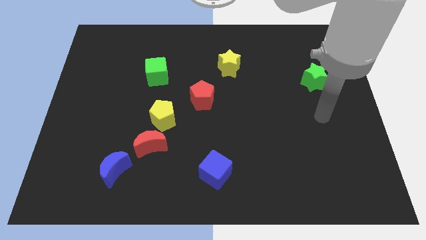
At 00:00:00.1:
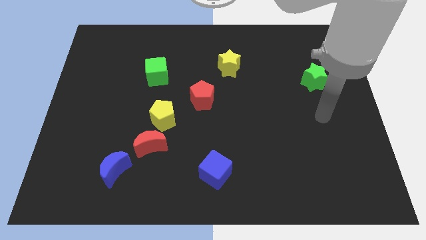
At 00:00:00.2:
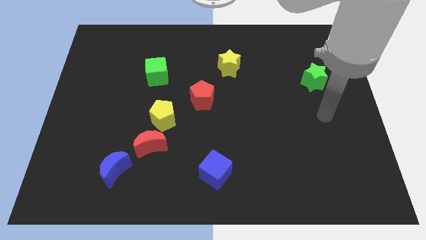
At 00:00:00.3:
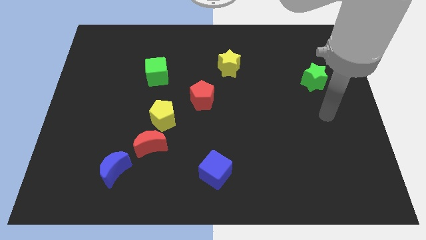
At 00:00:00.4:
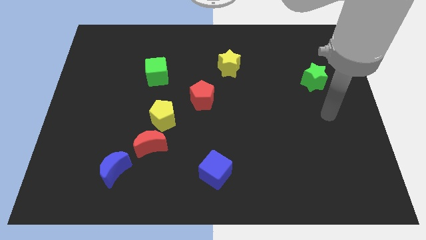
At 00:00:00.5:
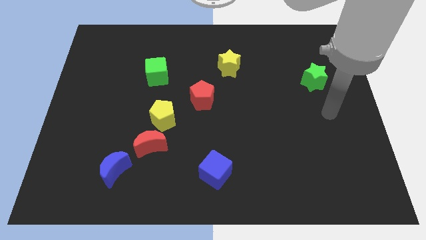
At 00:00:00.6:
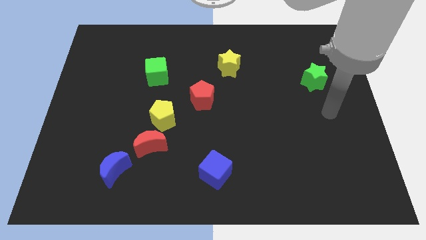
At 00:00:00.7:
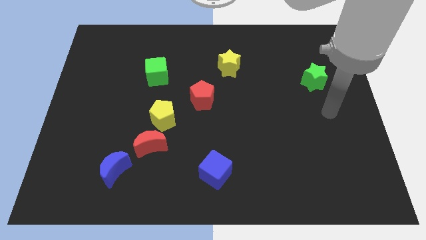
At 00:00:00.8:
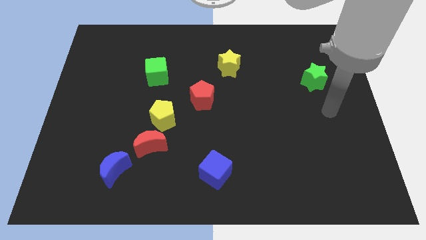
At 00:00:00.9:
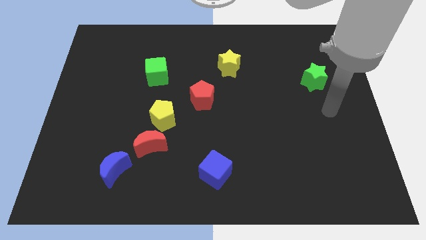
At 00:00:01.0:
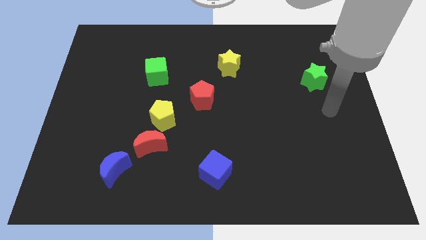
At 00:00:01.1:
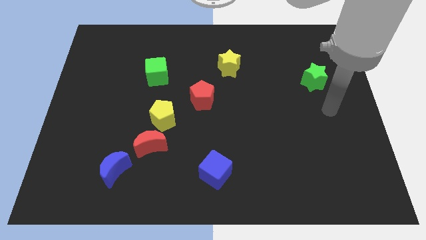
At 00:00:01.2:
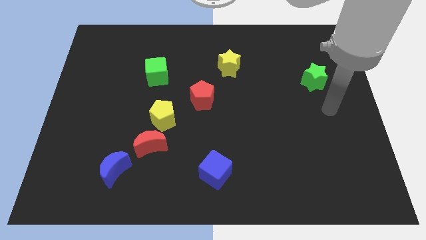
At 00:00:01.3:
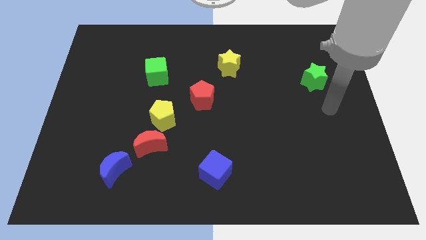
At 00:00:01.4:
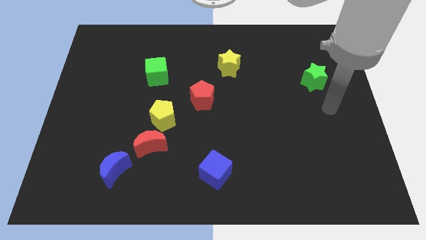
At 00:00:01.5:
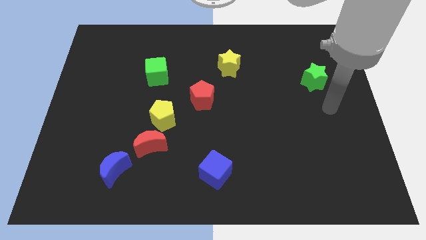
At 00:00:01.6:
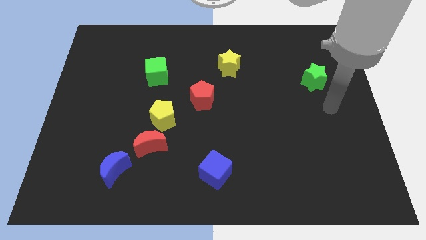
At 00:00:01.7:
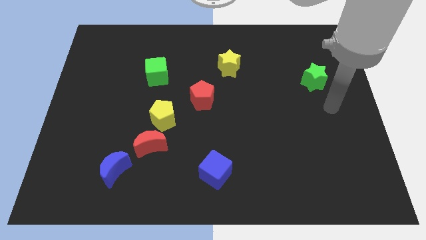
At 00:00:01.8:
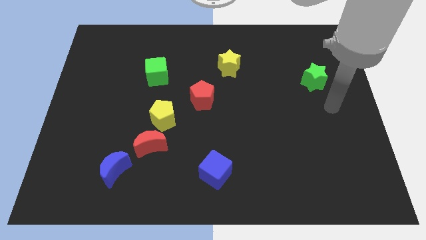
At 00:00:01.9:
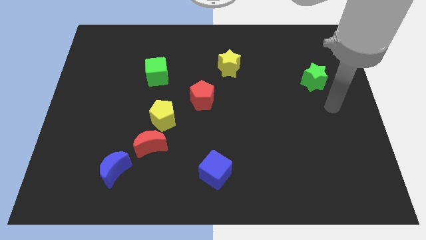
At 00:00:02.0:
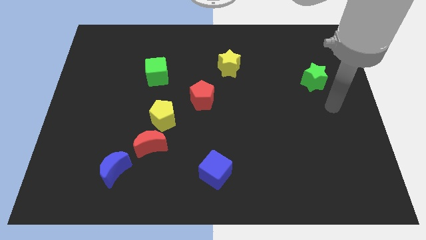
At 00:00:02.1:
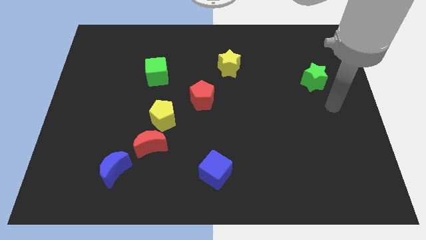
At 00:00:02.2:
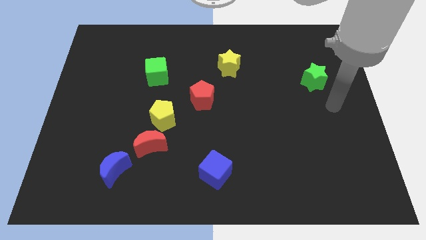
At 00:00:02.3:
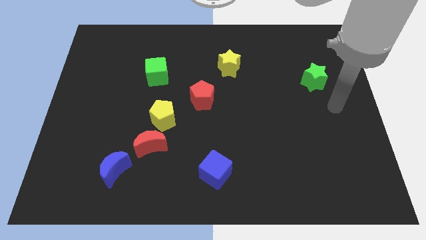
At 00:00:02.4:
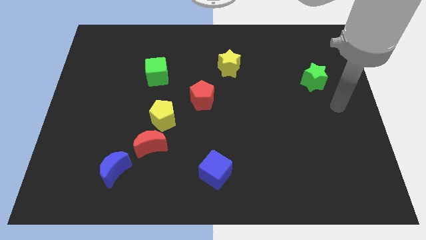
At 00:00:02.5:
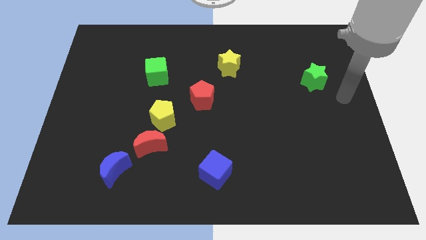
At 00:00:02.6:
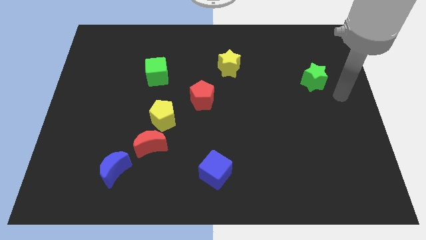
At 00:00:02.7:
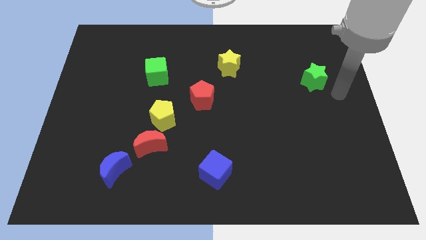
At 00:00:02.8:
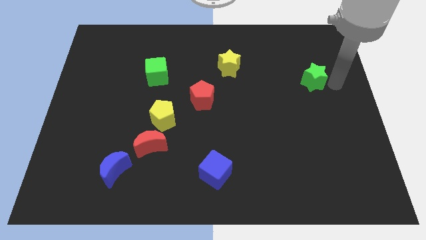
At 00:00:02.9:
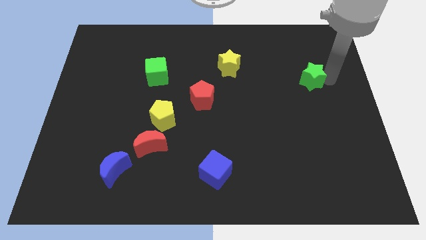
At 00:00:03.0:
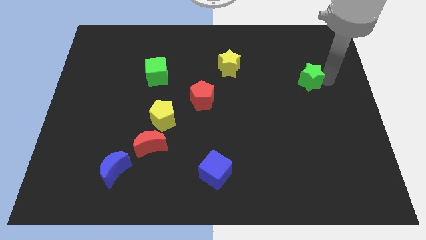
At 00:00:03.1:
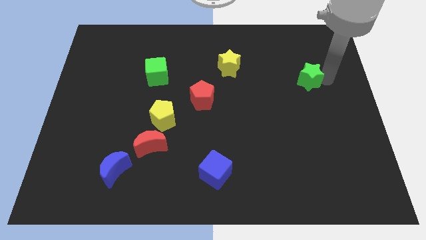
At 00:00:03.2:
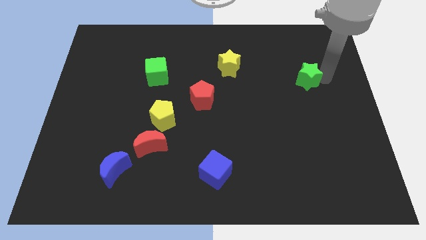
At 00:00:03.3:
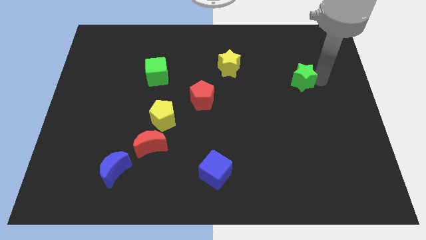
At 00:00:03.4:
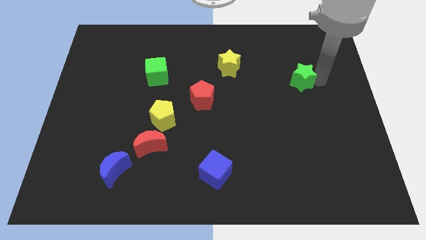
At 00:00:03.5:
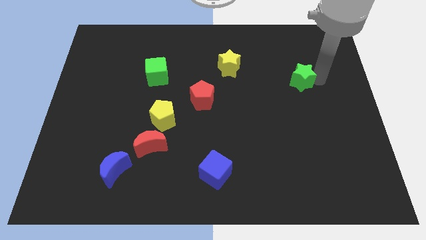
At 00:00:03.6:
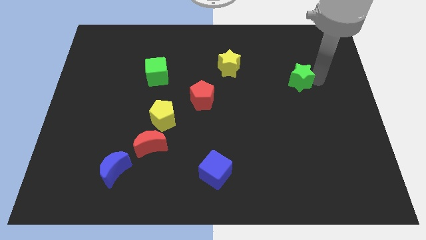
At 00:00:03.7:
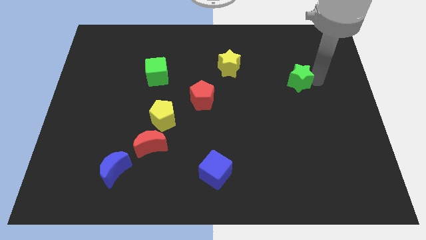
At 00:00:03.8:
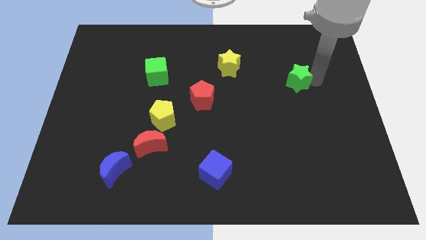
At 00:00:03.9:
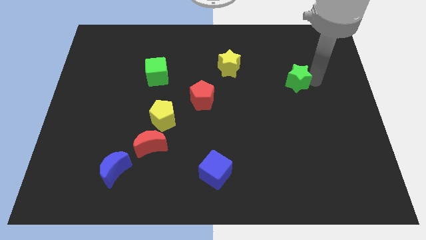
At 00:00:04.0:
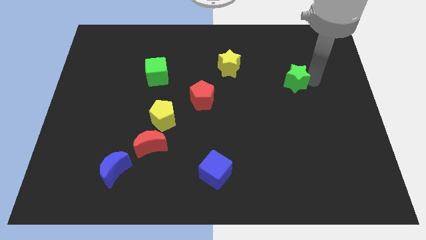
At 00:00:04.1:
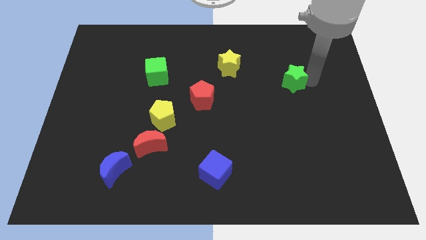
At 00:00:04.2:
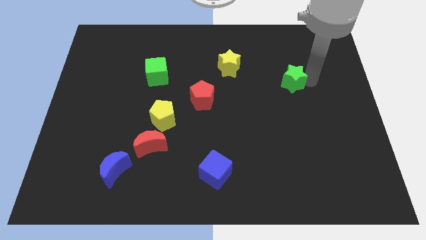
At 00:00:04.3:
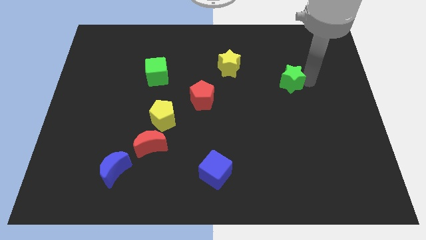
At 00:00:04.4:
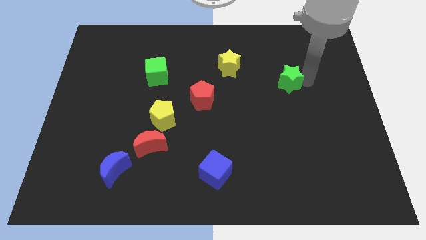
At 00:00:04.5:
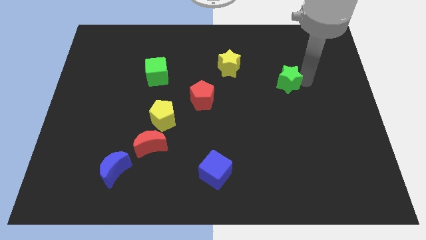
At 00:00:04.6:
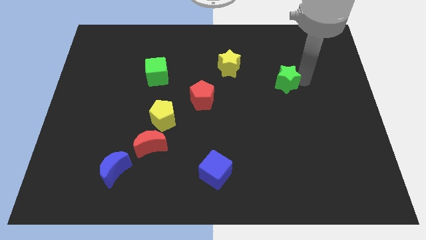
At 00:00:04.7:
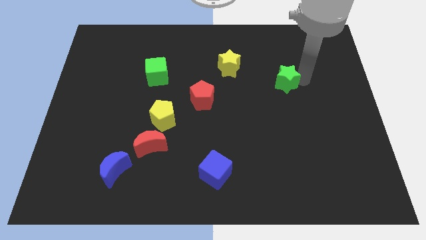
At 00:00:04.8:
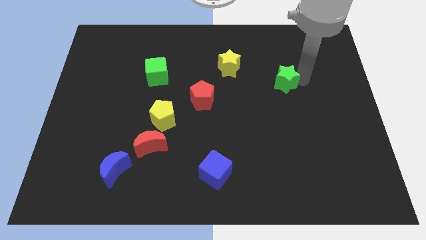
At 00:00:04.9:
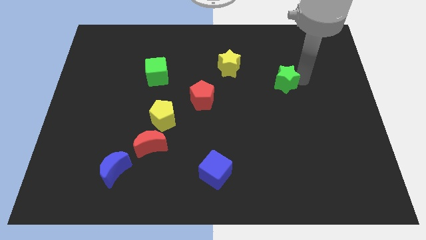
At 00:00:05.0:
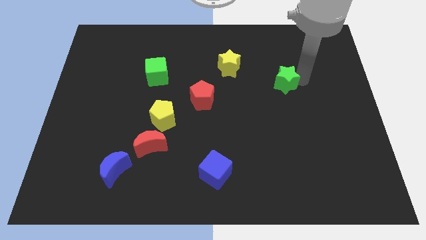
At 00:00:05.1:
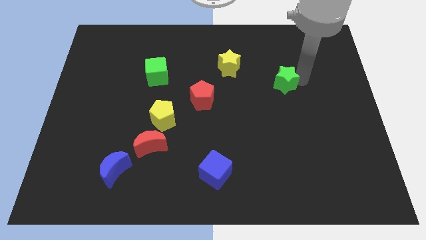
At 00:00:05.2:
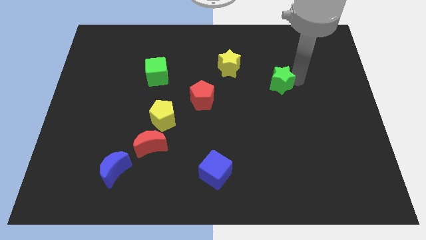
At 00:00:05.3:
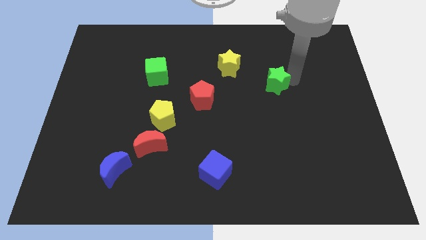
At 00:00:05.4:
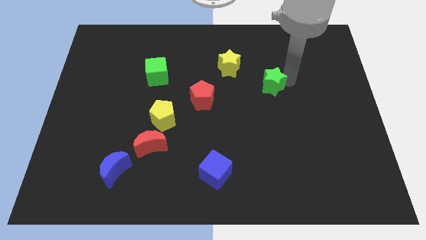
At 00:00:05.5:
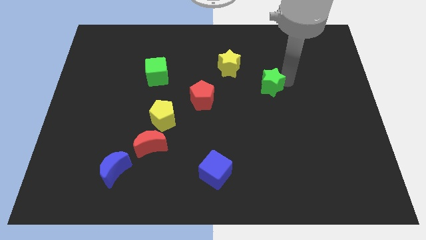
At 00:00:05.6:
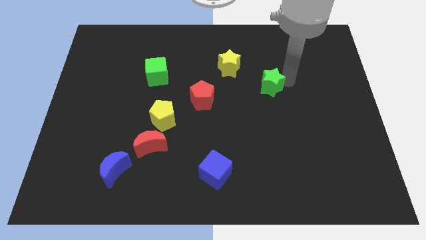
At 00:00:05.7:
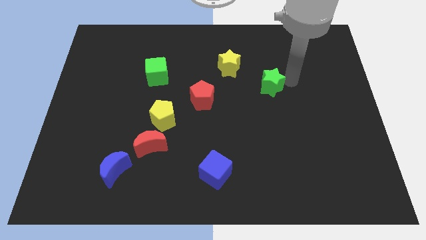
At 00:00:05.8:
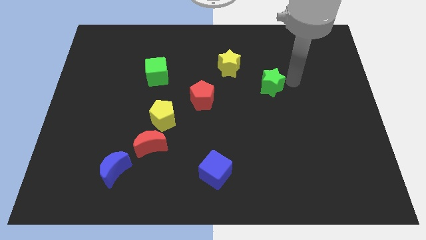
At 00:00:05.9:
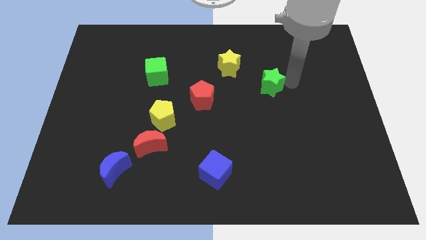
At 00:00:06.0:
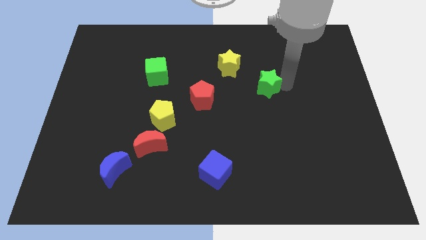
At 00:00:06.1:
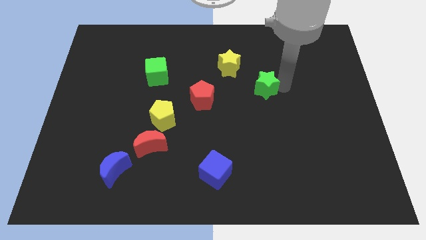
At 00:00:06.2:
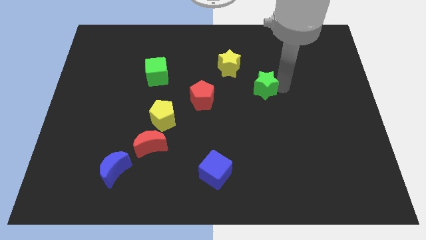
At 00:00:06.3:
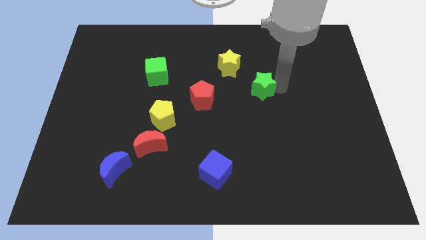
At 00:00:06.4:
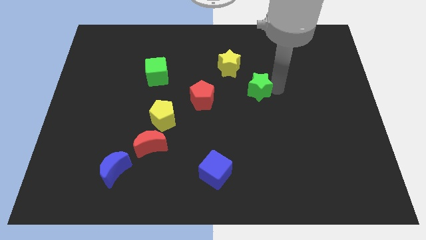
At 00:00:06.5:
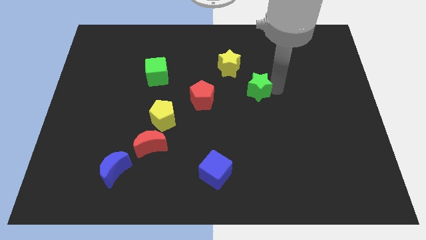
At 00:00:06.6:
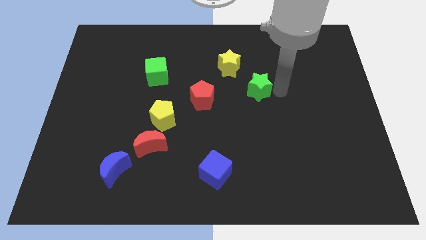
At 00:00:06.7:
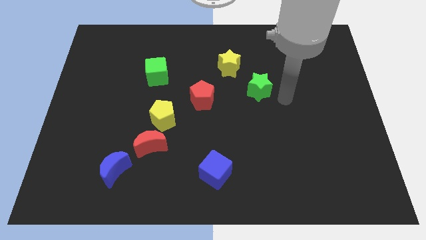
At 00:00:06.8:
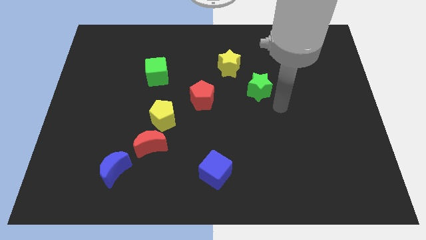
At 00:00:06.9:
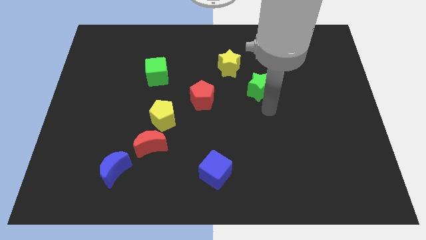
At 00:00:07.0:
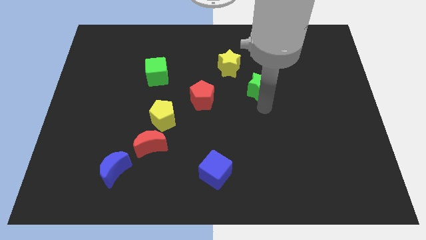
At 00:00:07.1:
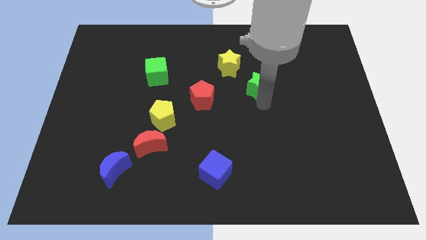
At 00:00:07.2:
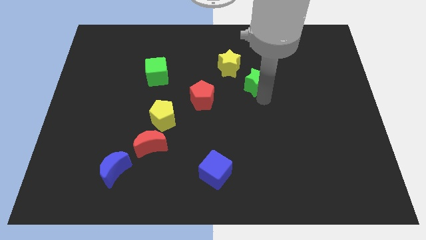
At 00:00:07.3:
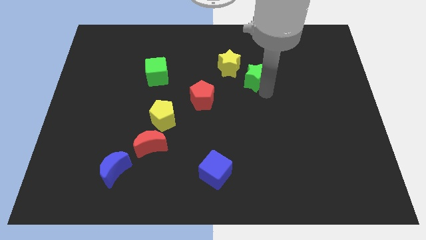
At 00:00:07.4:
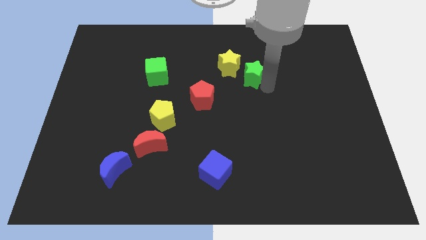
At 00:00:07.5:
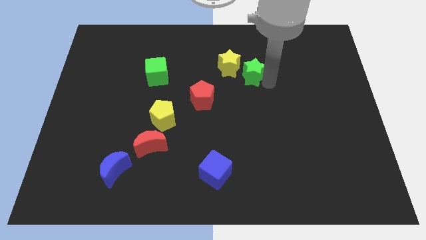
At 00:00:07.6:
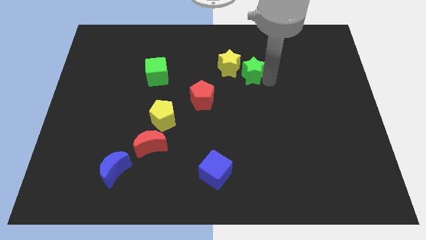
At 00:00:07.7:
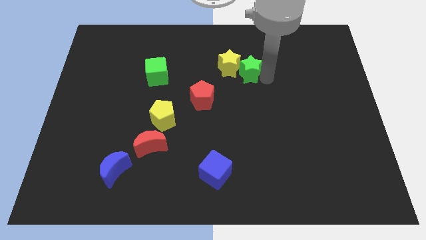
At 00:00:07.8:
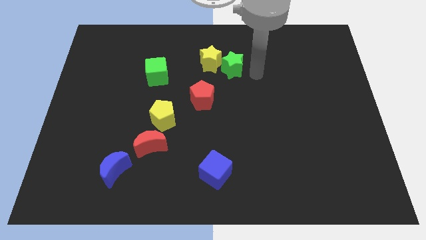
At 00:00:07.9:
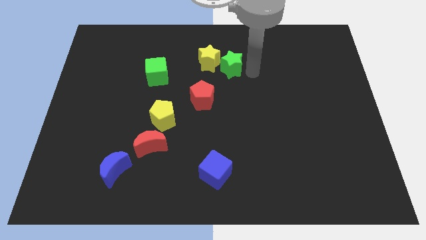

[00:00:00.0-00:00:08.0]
place green star to the right of yellow star

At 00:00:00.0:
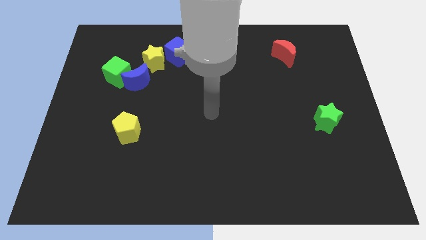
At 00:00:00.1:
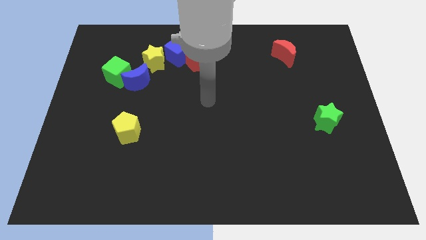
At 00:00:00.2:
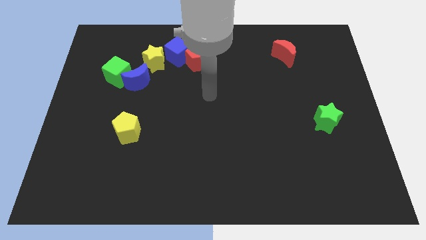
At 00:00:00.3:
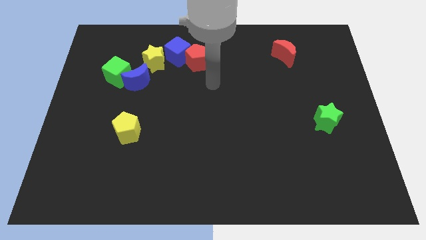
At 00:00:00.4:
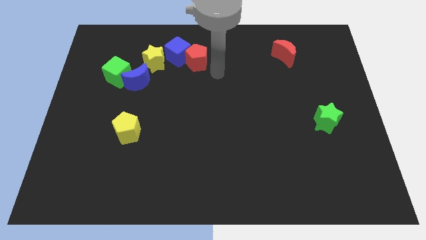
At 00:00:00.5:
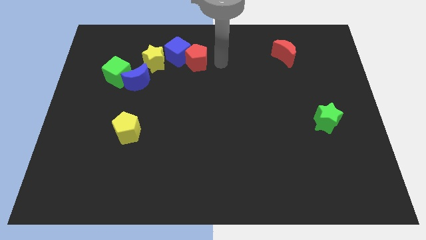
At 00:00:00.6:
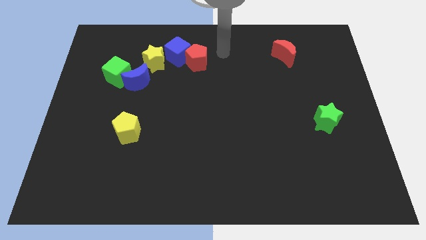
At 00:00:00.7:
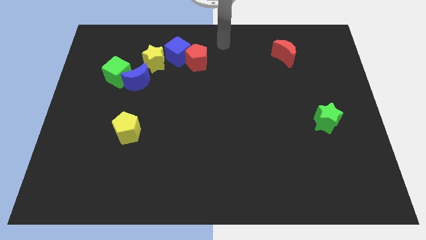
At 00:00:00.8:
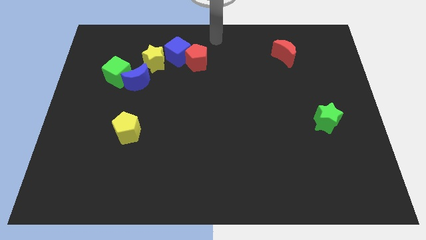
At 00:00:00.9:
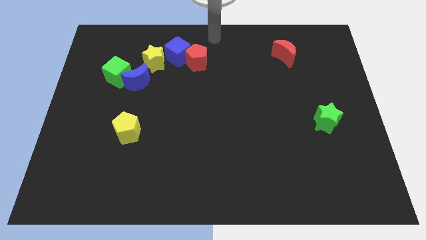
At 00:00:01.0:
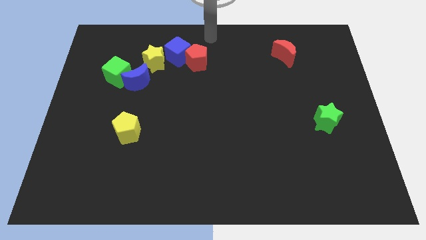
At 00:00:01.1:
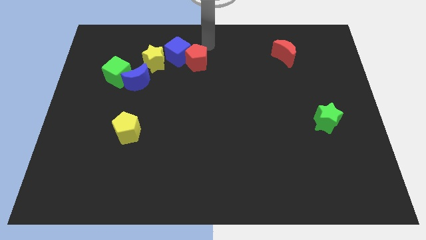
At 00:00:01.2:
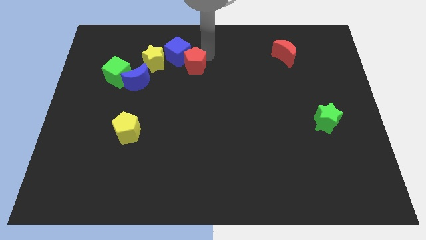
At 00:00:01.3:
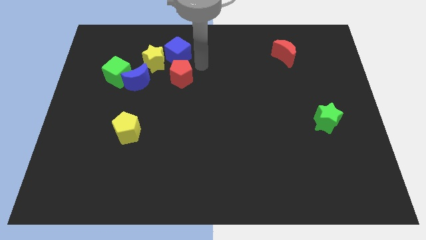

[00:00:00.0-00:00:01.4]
touch the red pentagon
